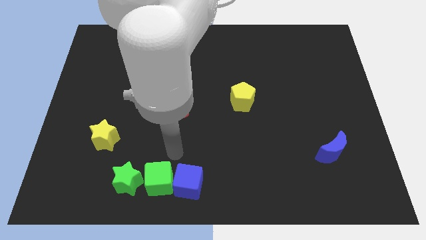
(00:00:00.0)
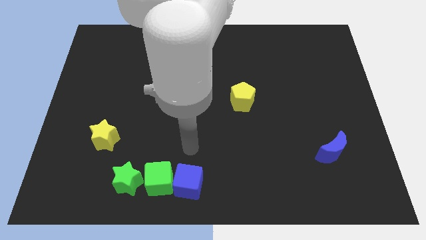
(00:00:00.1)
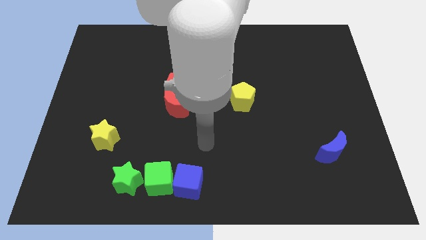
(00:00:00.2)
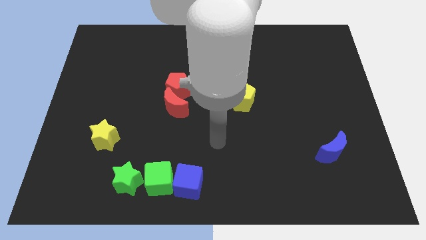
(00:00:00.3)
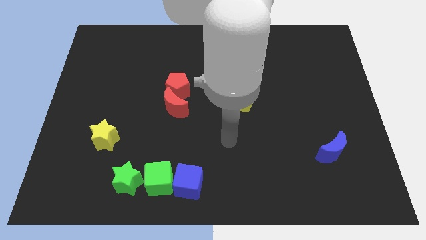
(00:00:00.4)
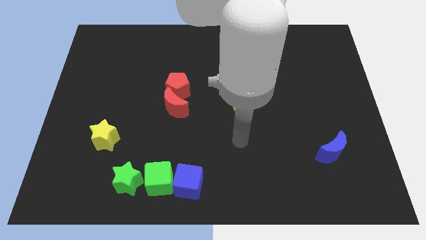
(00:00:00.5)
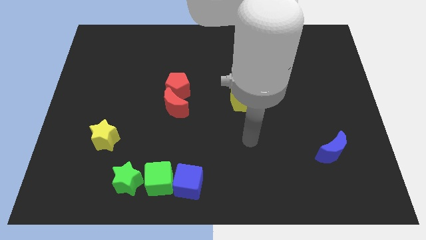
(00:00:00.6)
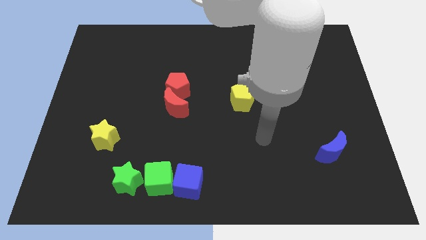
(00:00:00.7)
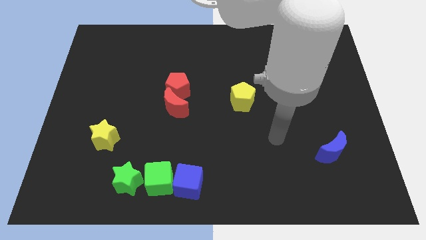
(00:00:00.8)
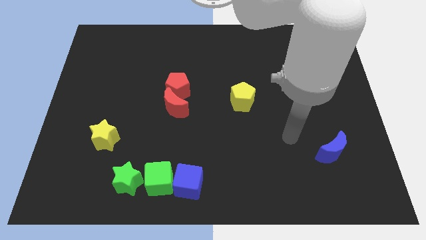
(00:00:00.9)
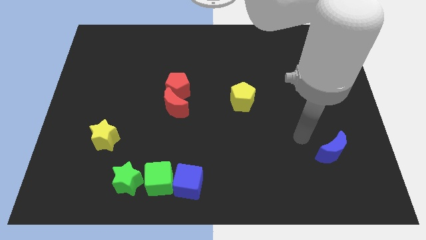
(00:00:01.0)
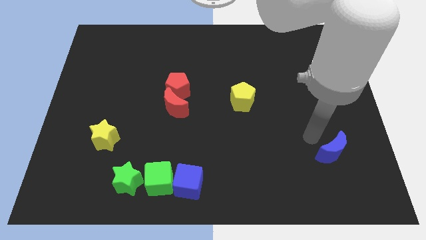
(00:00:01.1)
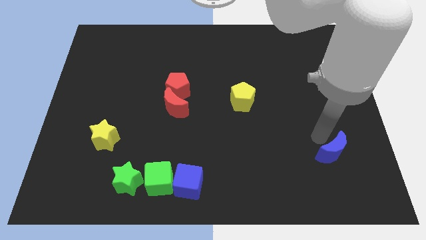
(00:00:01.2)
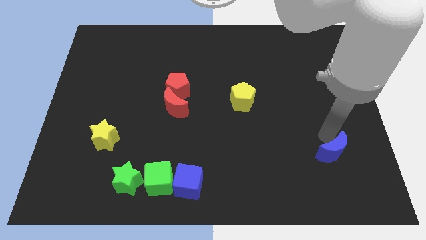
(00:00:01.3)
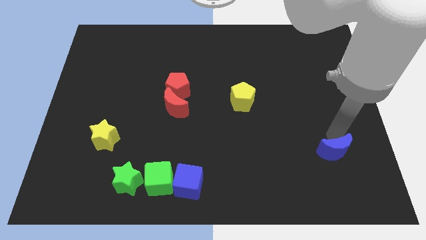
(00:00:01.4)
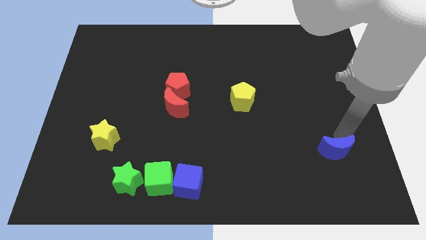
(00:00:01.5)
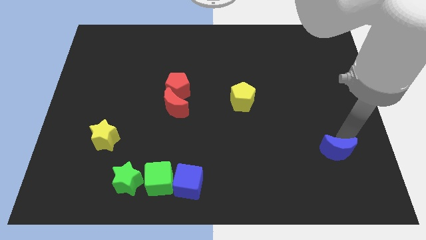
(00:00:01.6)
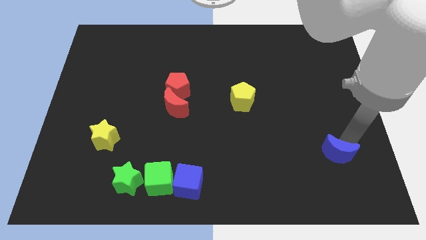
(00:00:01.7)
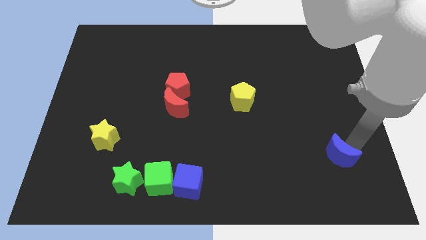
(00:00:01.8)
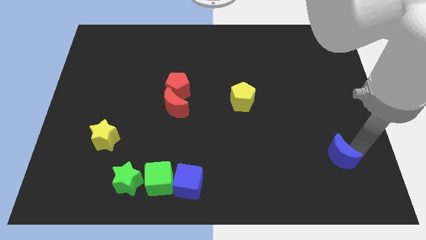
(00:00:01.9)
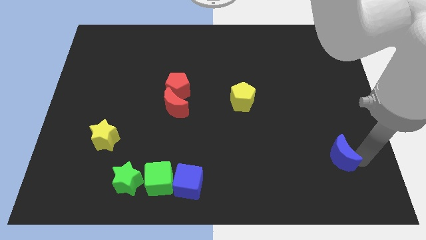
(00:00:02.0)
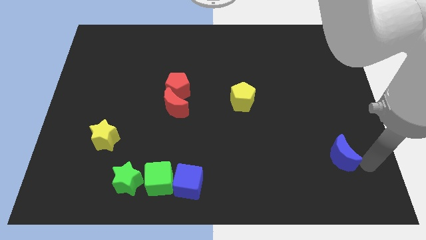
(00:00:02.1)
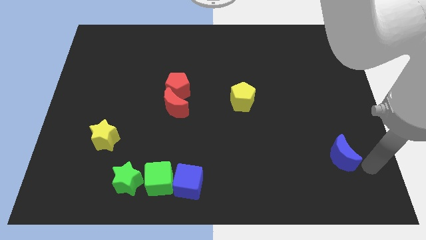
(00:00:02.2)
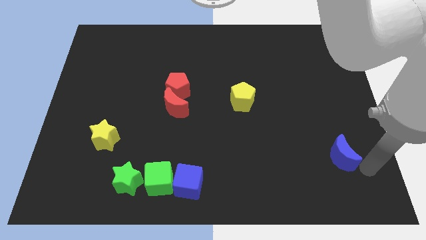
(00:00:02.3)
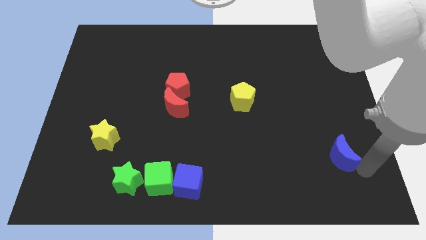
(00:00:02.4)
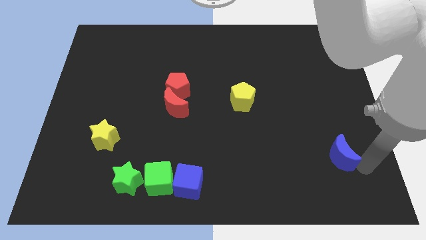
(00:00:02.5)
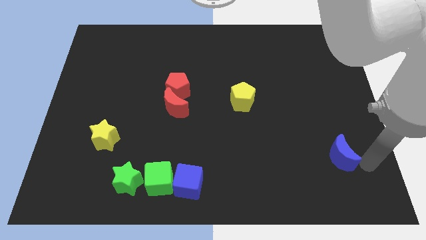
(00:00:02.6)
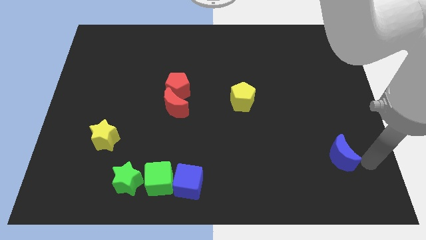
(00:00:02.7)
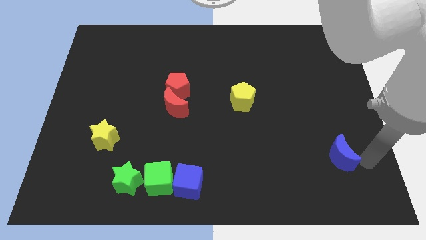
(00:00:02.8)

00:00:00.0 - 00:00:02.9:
rotate the blue moon to the right side

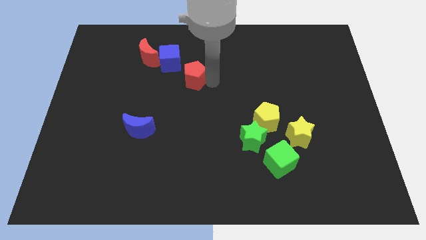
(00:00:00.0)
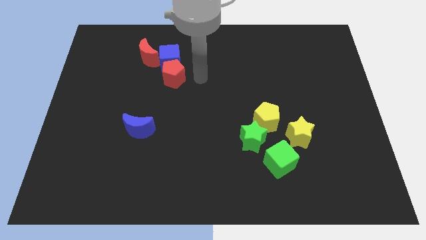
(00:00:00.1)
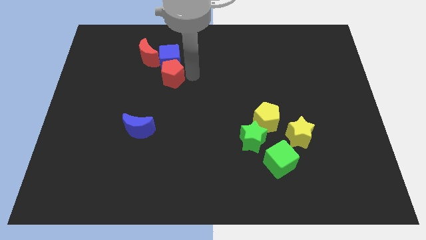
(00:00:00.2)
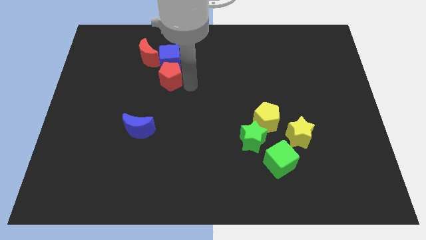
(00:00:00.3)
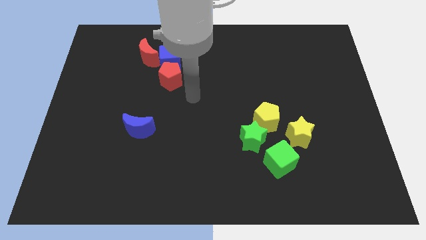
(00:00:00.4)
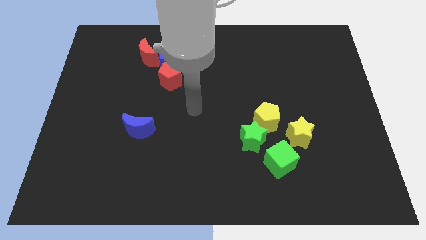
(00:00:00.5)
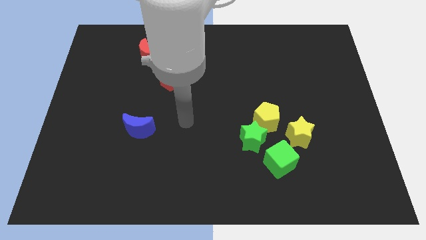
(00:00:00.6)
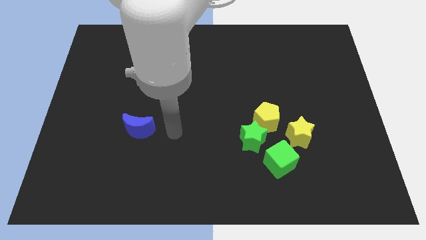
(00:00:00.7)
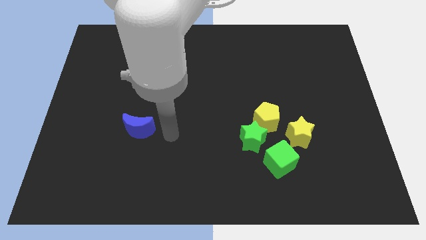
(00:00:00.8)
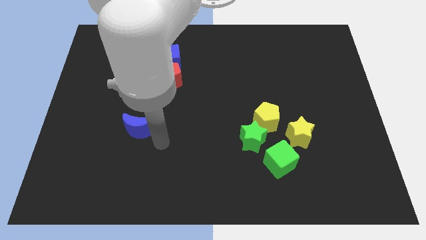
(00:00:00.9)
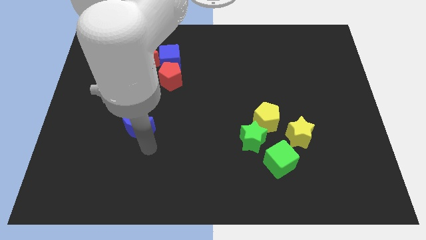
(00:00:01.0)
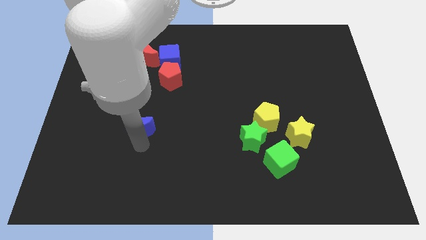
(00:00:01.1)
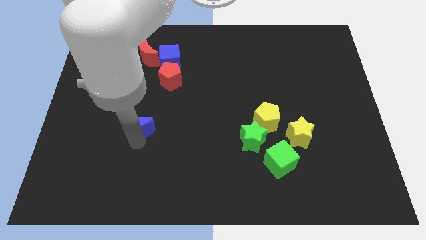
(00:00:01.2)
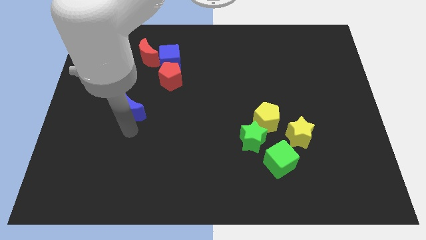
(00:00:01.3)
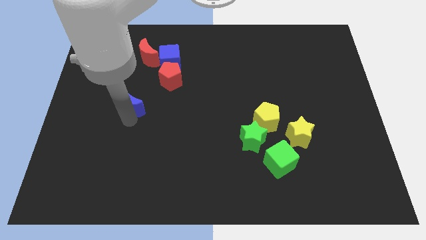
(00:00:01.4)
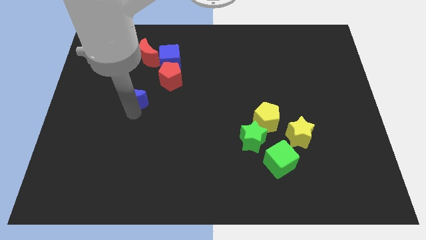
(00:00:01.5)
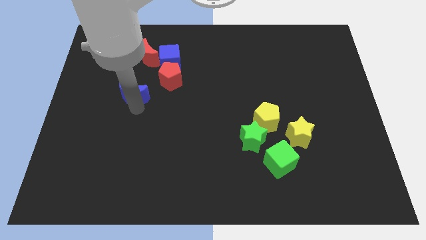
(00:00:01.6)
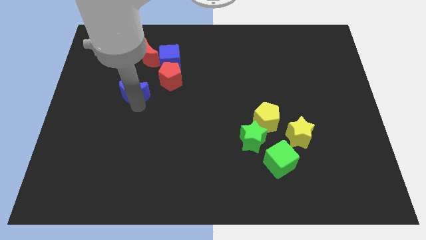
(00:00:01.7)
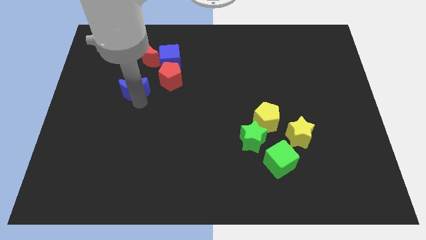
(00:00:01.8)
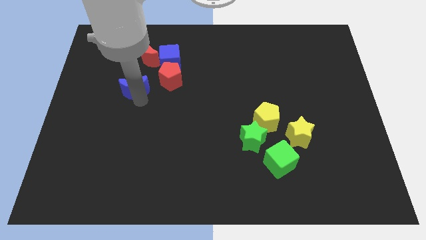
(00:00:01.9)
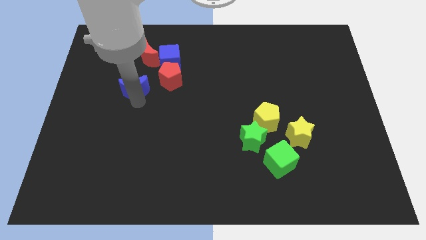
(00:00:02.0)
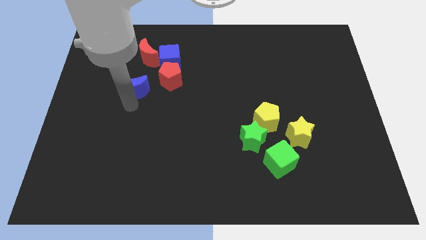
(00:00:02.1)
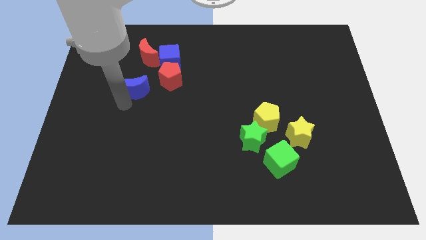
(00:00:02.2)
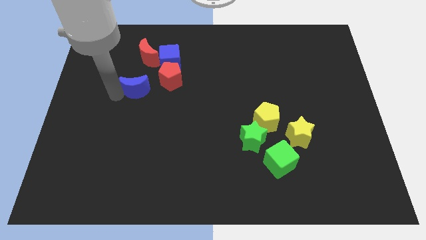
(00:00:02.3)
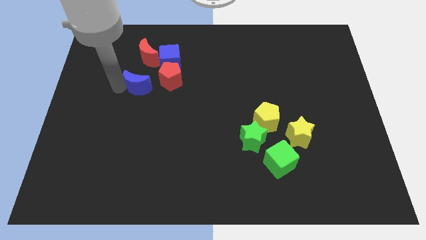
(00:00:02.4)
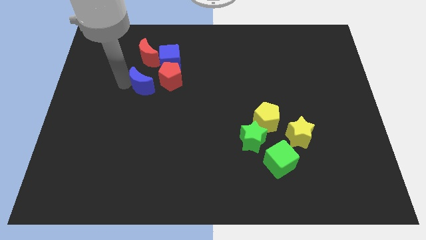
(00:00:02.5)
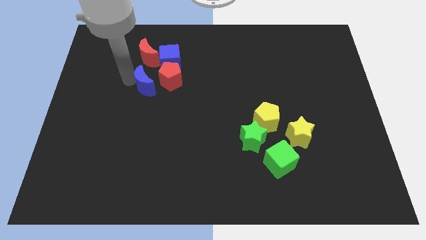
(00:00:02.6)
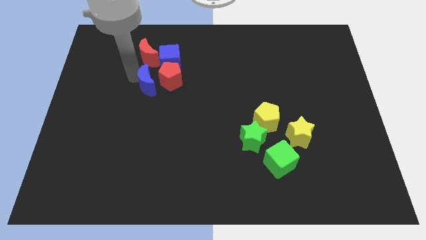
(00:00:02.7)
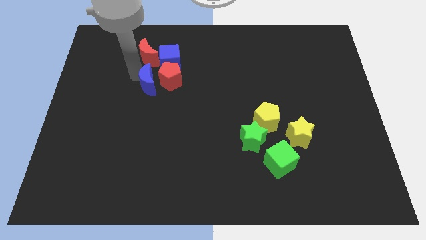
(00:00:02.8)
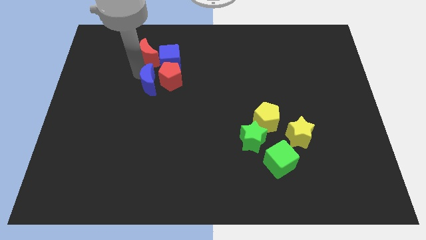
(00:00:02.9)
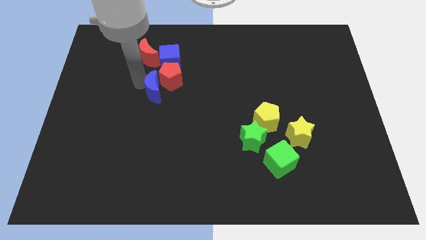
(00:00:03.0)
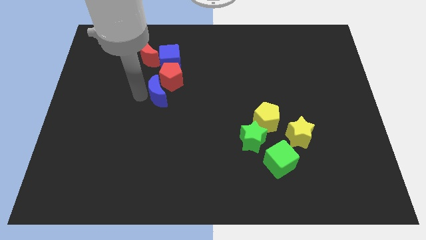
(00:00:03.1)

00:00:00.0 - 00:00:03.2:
push the blue moon into the red pentagon

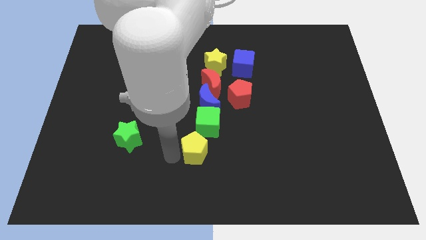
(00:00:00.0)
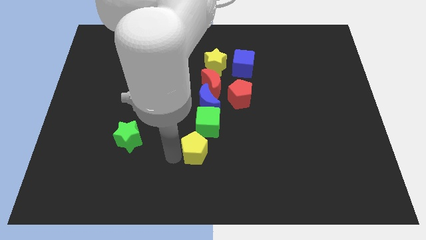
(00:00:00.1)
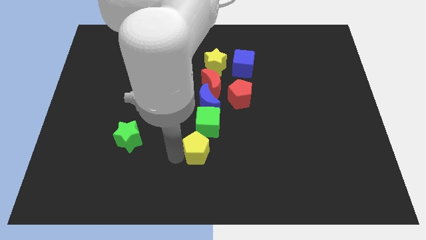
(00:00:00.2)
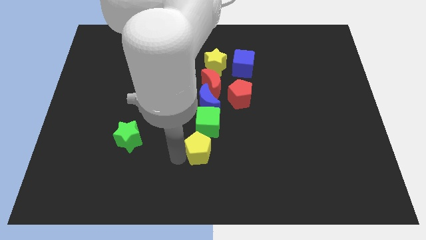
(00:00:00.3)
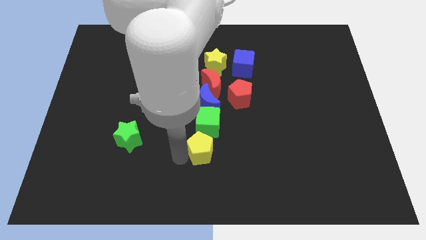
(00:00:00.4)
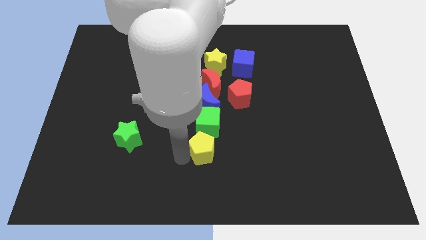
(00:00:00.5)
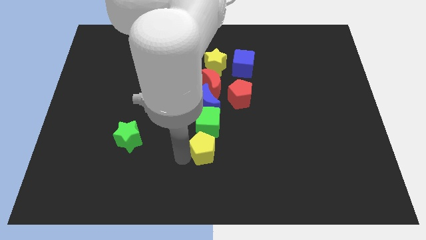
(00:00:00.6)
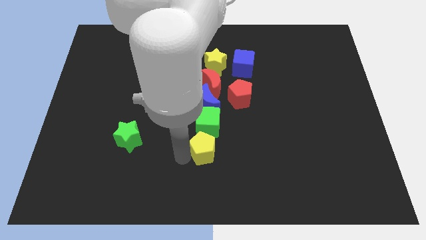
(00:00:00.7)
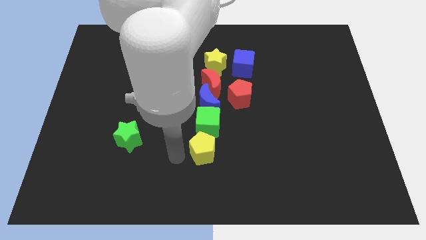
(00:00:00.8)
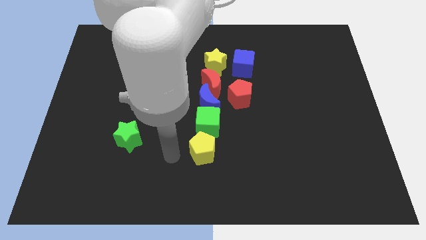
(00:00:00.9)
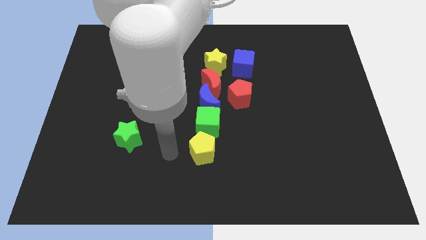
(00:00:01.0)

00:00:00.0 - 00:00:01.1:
push the yellow pentagon towards the right side of the board

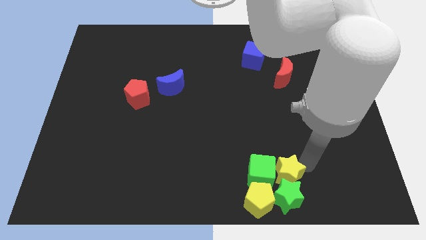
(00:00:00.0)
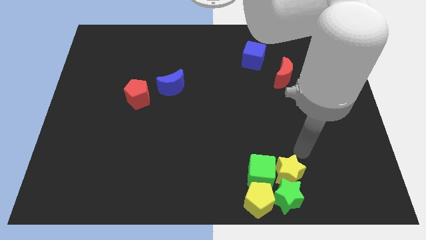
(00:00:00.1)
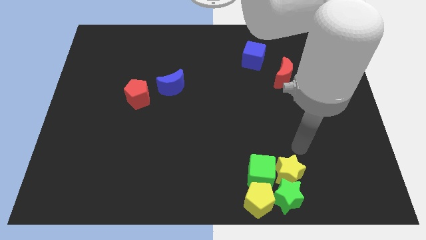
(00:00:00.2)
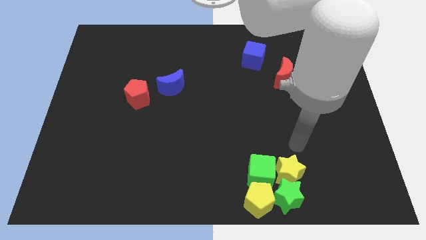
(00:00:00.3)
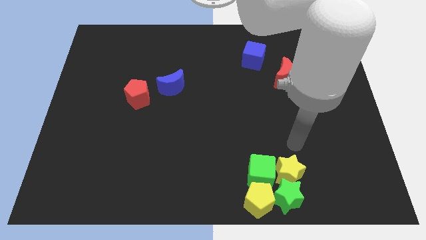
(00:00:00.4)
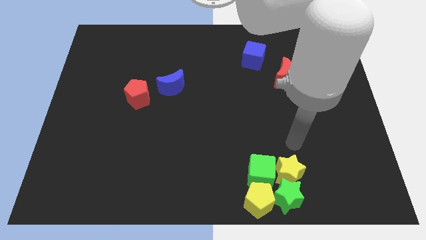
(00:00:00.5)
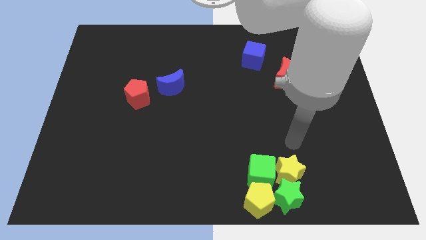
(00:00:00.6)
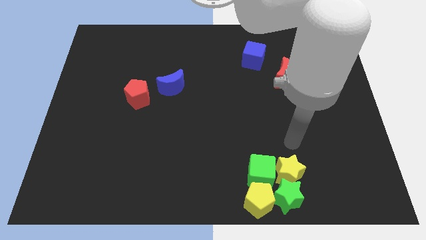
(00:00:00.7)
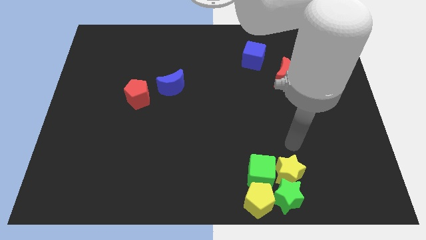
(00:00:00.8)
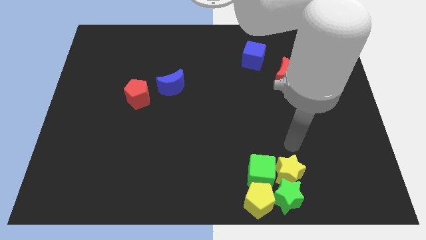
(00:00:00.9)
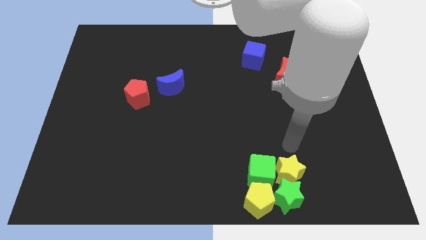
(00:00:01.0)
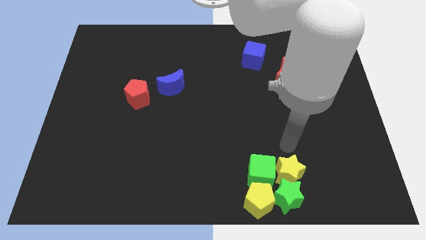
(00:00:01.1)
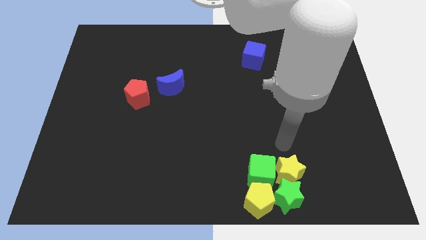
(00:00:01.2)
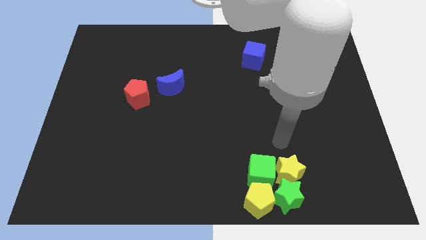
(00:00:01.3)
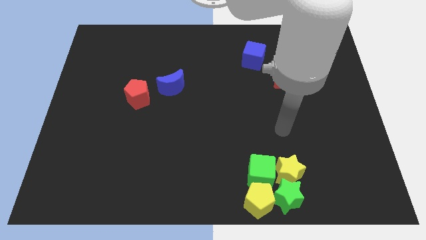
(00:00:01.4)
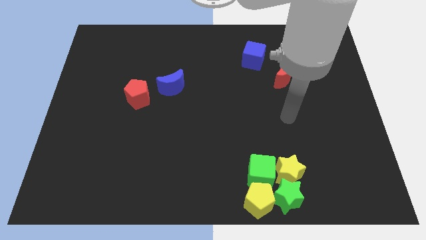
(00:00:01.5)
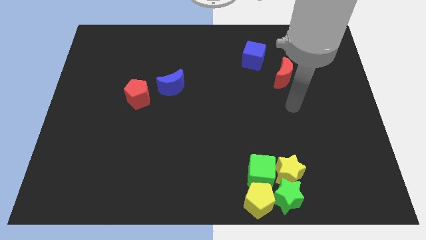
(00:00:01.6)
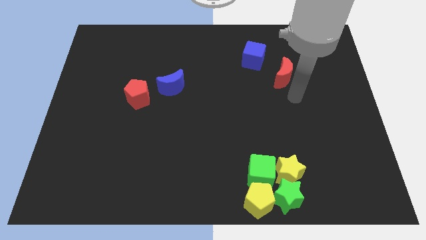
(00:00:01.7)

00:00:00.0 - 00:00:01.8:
move your arm away from the yellow star
